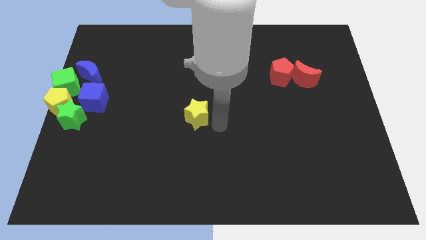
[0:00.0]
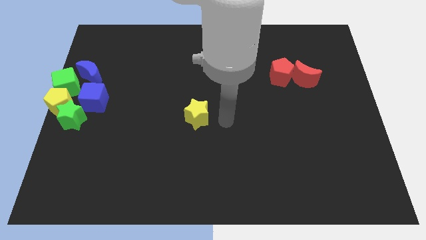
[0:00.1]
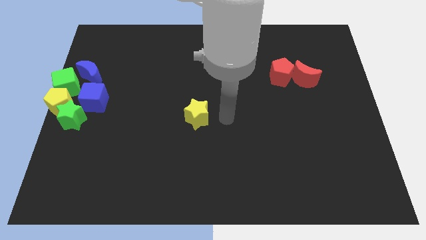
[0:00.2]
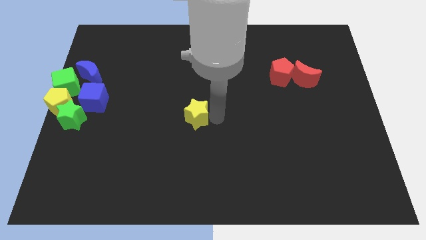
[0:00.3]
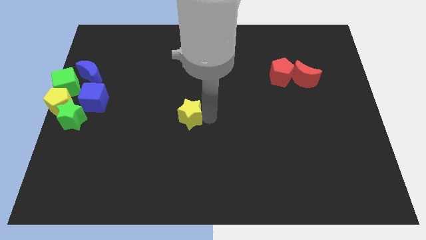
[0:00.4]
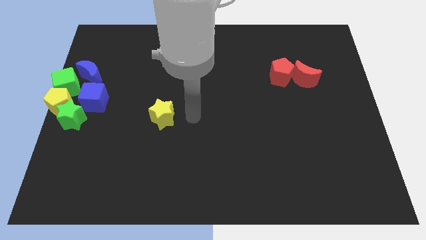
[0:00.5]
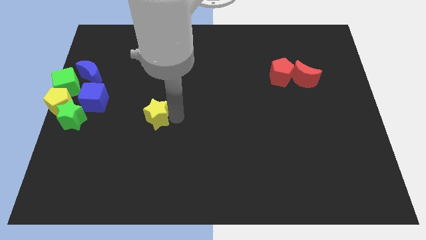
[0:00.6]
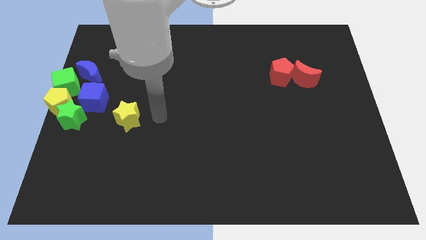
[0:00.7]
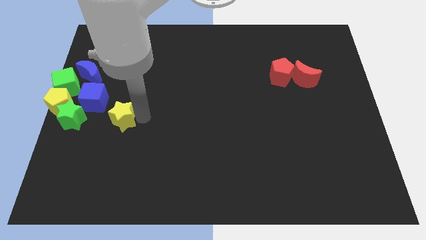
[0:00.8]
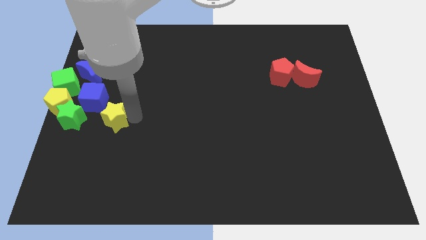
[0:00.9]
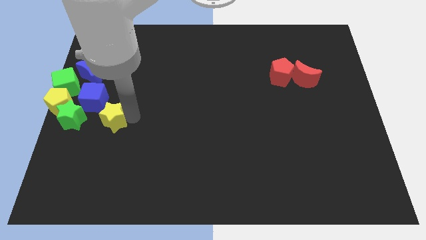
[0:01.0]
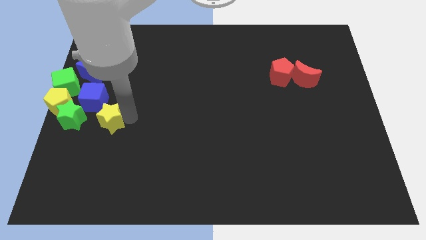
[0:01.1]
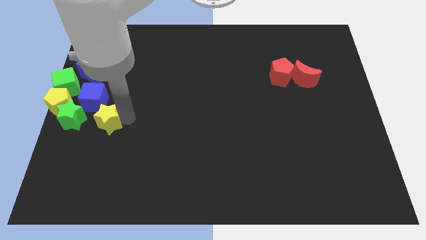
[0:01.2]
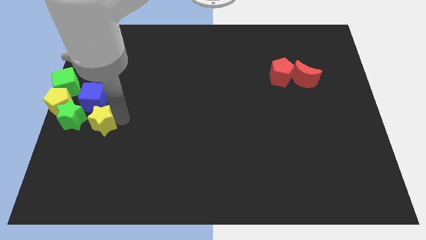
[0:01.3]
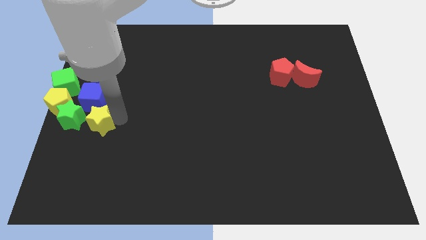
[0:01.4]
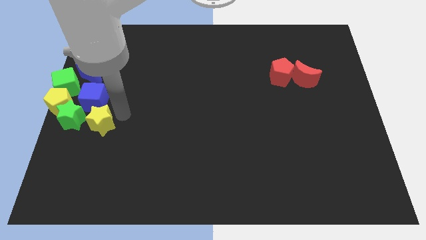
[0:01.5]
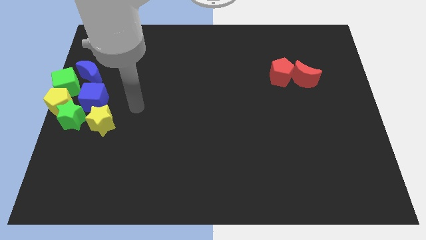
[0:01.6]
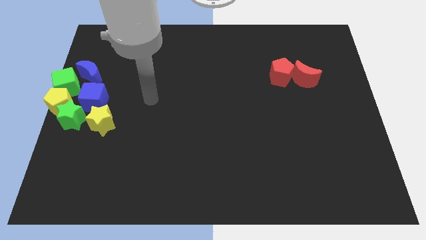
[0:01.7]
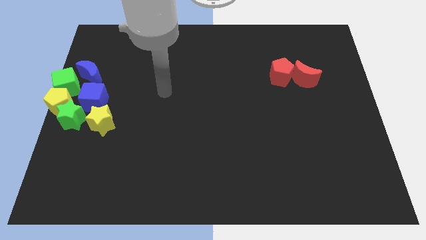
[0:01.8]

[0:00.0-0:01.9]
slide the yellow star slightly towards the green star

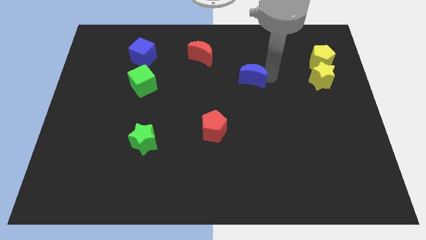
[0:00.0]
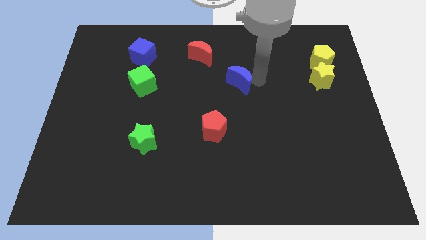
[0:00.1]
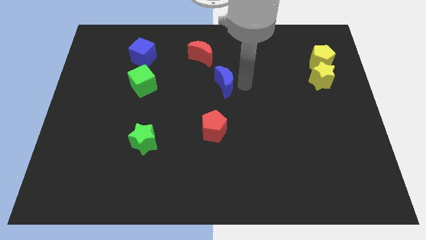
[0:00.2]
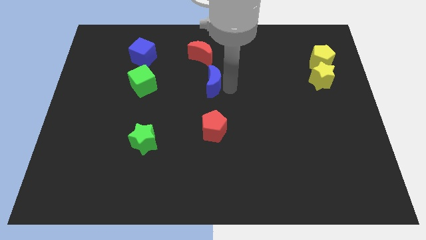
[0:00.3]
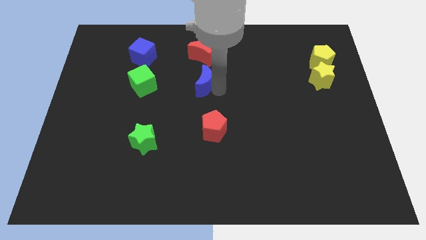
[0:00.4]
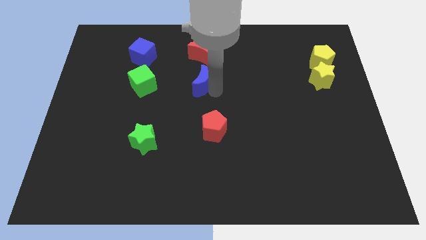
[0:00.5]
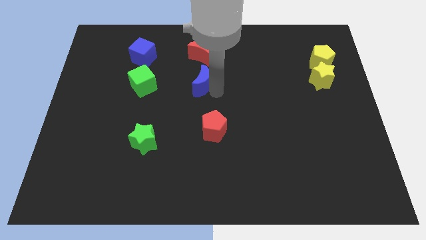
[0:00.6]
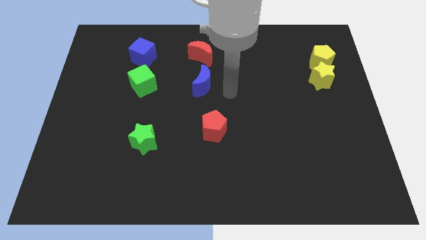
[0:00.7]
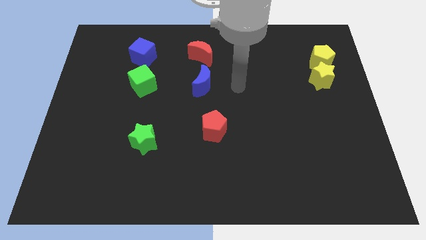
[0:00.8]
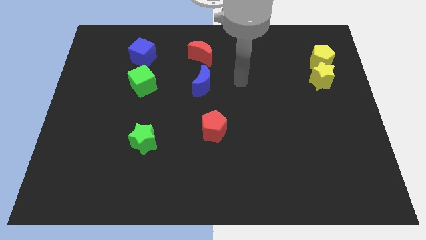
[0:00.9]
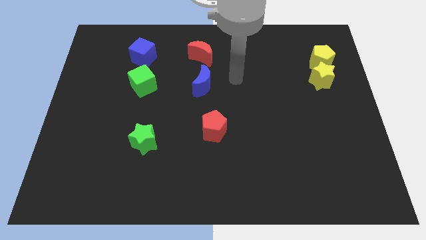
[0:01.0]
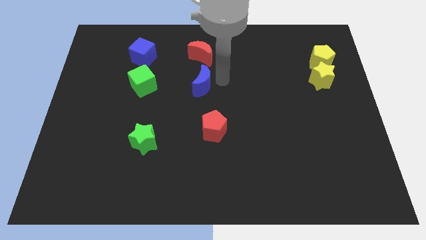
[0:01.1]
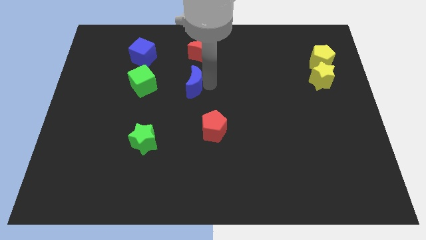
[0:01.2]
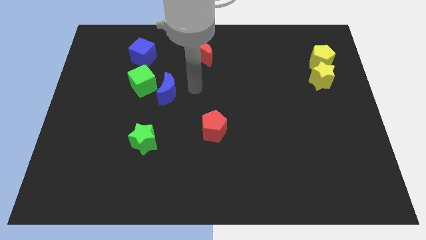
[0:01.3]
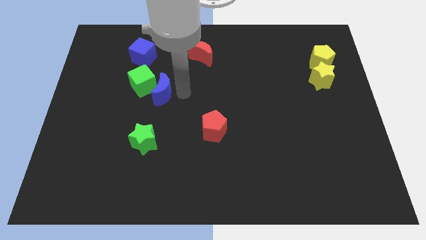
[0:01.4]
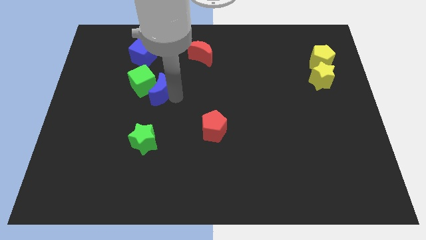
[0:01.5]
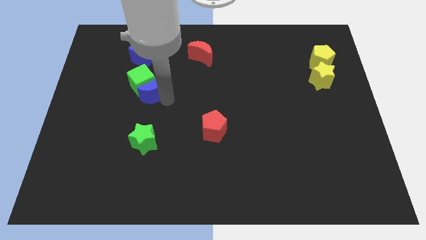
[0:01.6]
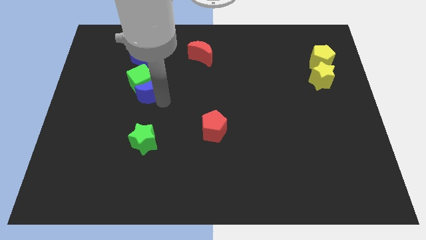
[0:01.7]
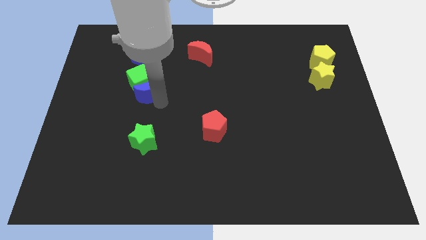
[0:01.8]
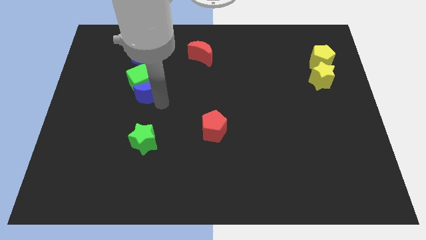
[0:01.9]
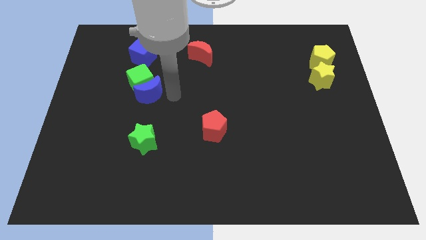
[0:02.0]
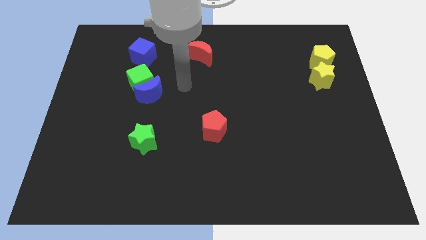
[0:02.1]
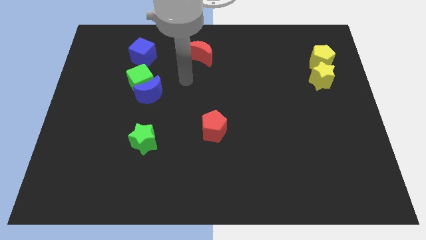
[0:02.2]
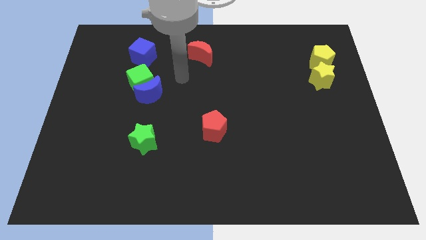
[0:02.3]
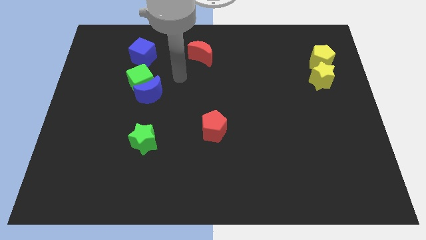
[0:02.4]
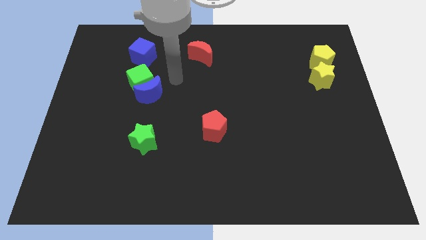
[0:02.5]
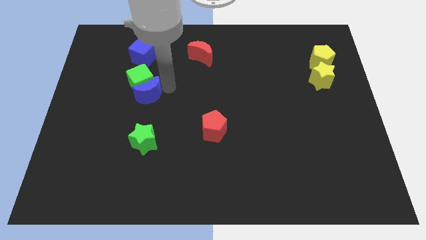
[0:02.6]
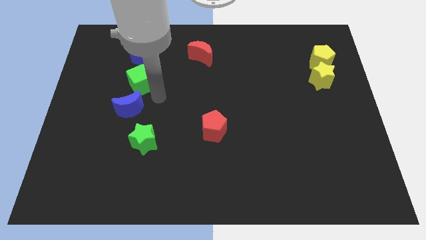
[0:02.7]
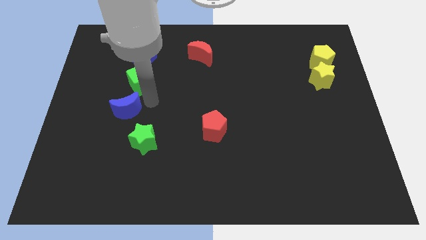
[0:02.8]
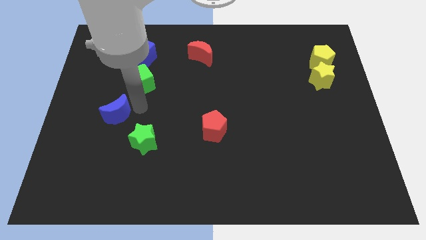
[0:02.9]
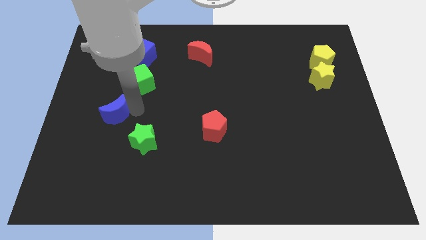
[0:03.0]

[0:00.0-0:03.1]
move the blue crescent below the green cube

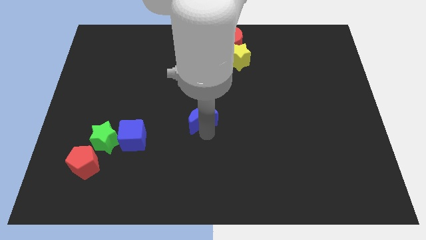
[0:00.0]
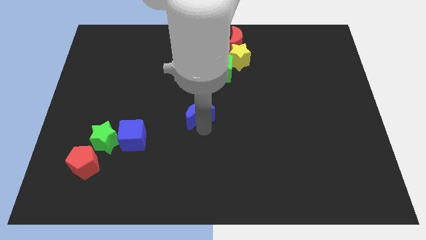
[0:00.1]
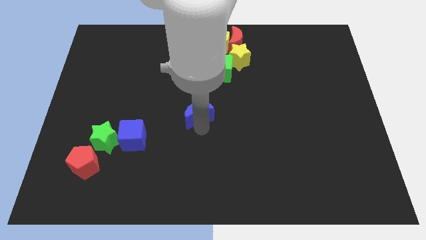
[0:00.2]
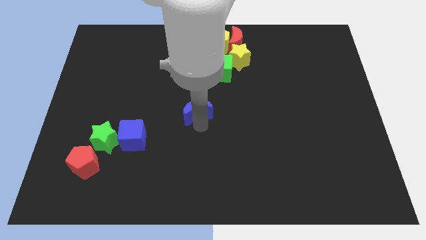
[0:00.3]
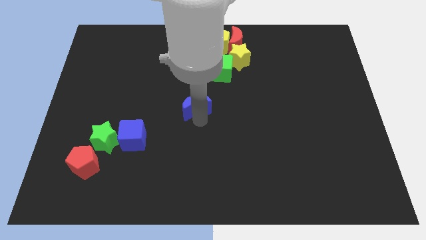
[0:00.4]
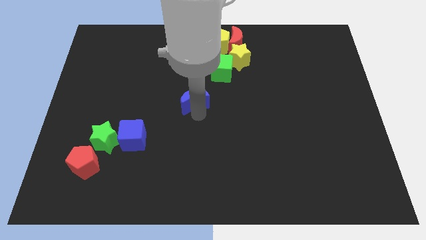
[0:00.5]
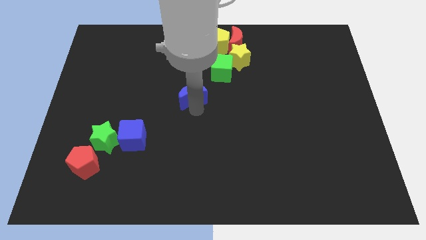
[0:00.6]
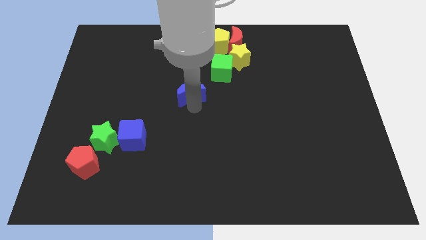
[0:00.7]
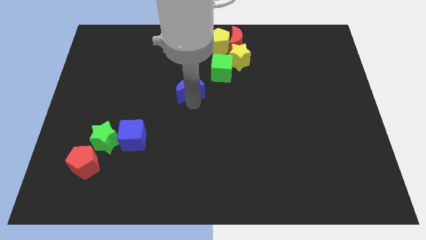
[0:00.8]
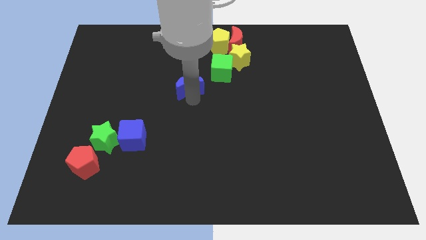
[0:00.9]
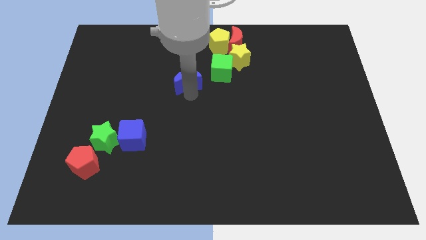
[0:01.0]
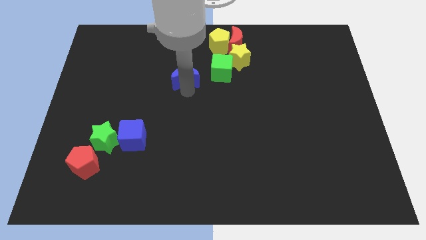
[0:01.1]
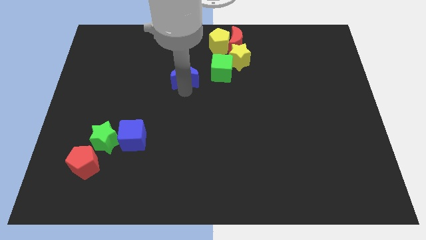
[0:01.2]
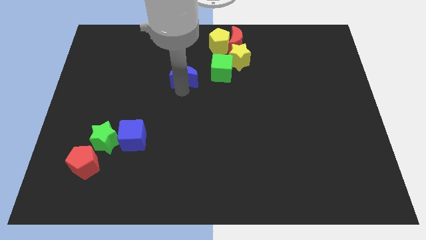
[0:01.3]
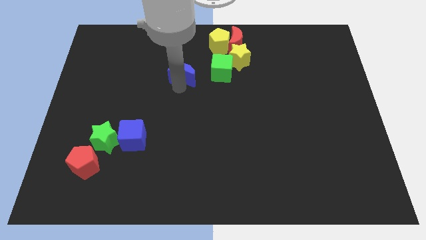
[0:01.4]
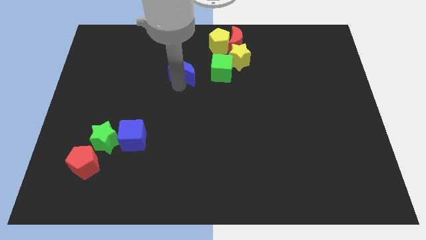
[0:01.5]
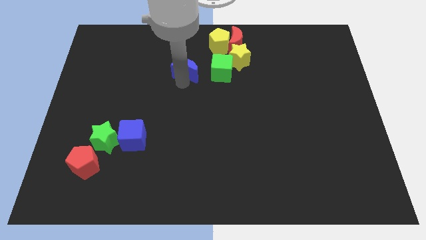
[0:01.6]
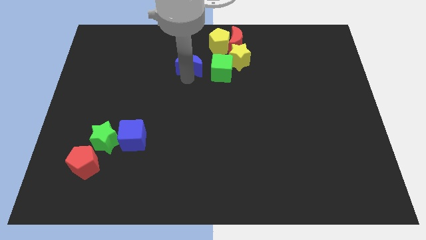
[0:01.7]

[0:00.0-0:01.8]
place the blue moon left to the green cube

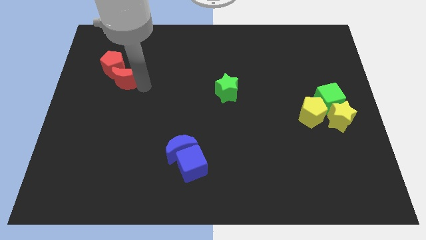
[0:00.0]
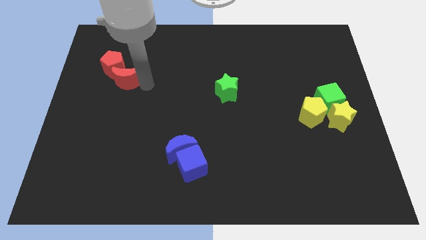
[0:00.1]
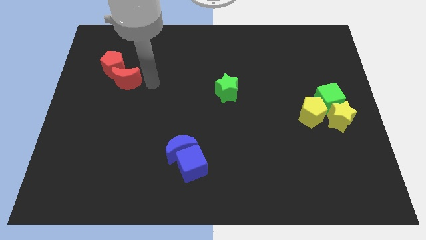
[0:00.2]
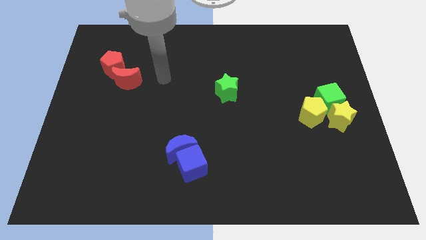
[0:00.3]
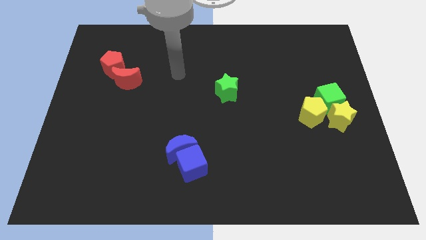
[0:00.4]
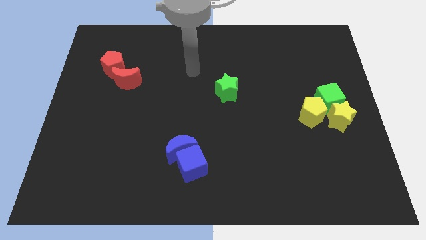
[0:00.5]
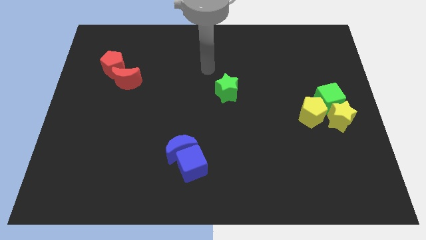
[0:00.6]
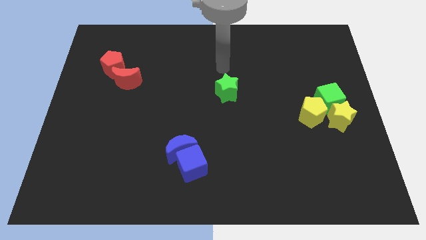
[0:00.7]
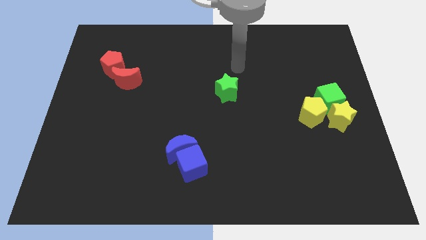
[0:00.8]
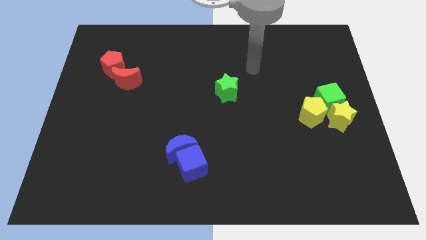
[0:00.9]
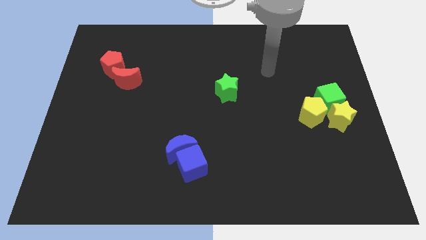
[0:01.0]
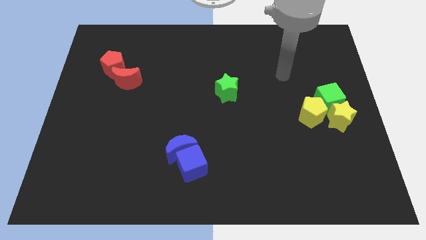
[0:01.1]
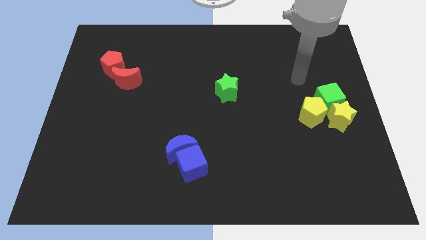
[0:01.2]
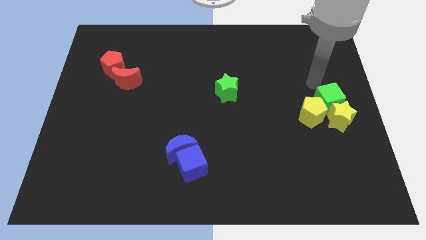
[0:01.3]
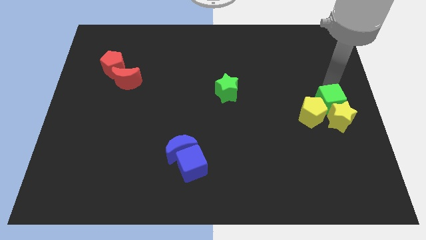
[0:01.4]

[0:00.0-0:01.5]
place your arm at the top of green cube

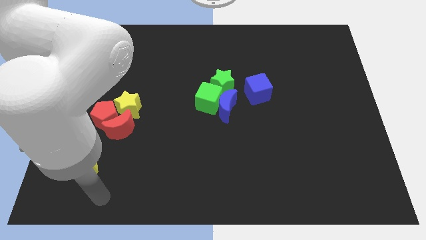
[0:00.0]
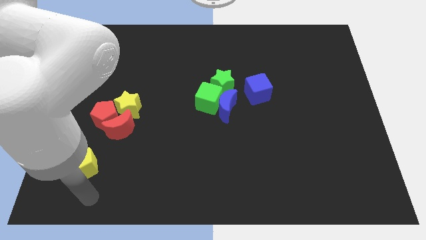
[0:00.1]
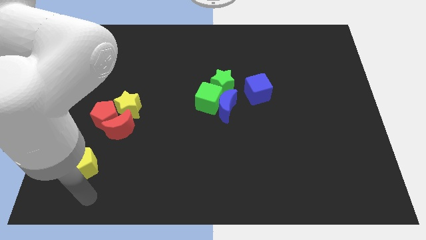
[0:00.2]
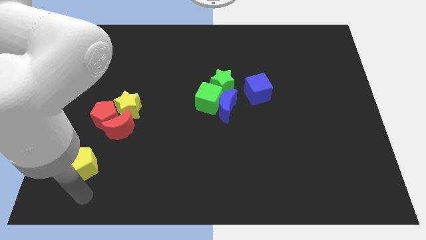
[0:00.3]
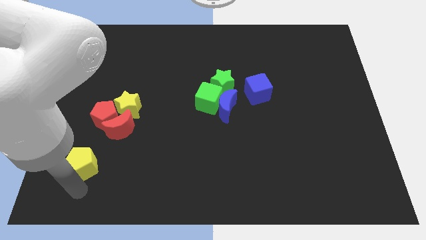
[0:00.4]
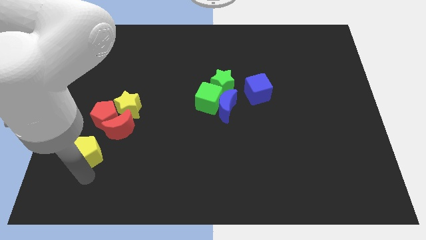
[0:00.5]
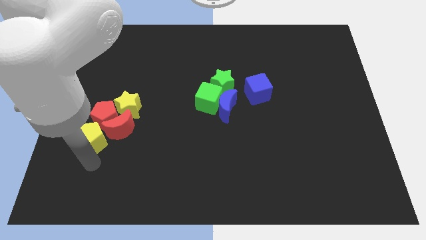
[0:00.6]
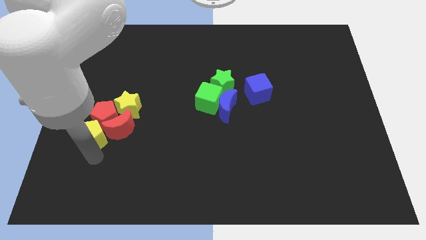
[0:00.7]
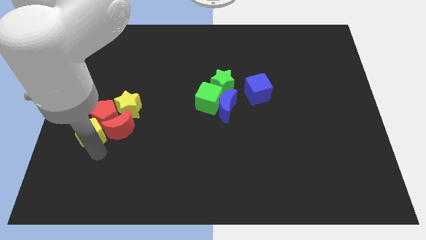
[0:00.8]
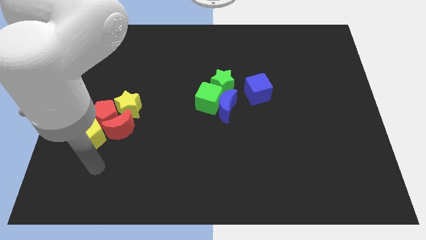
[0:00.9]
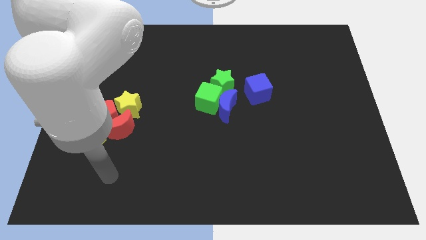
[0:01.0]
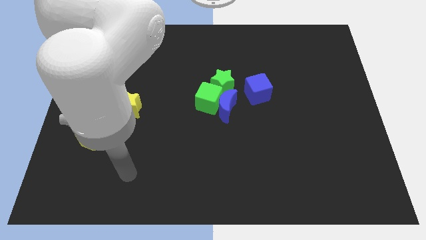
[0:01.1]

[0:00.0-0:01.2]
push the yellow pentagon to the left of the red moon
